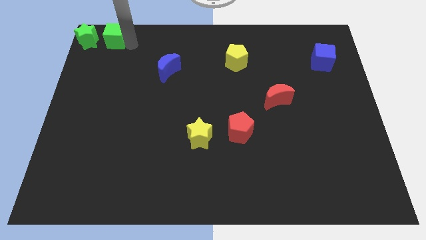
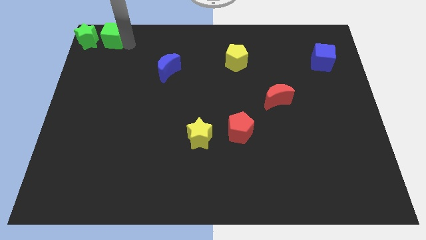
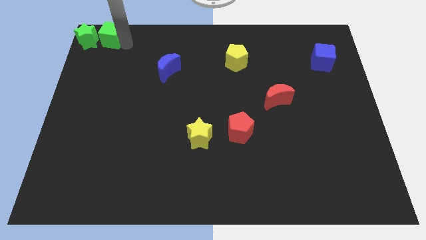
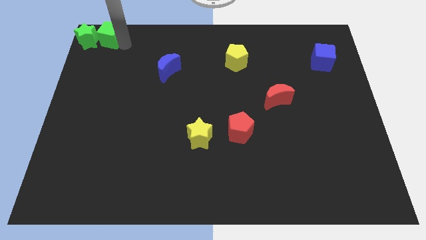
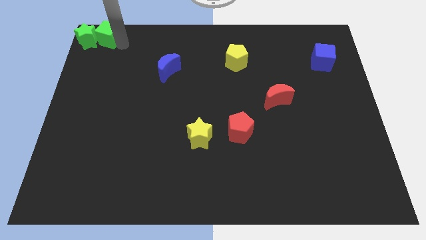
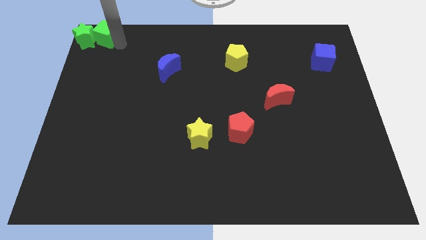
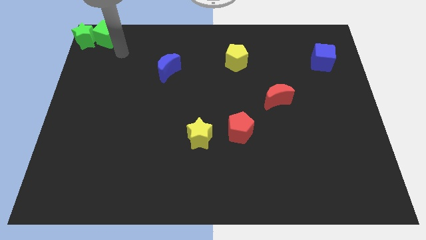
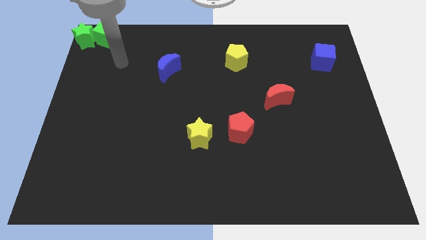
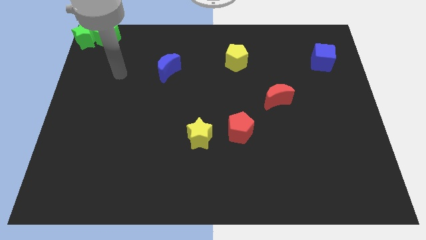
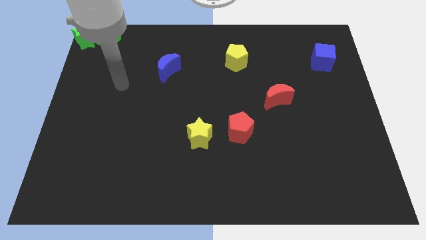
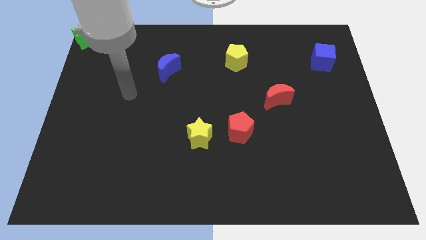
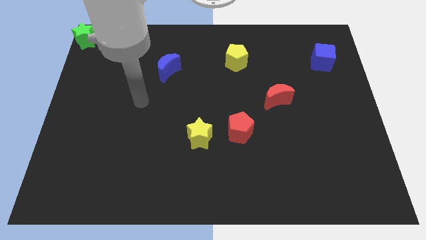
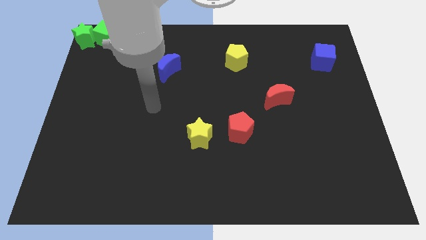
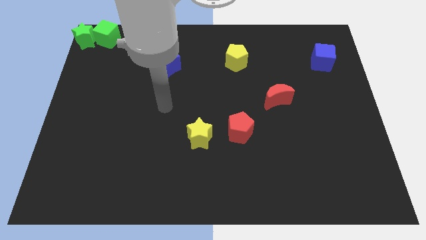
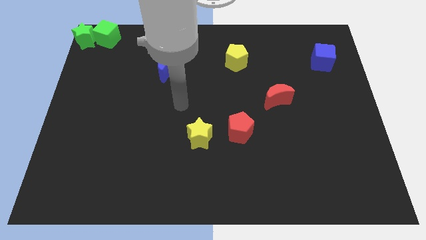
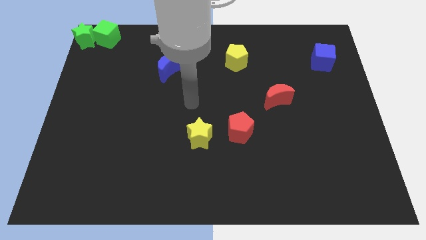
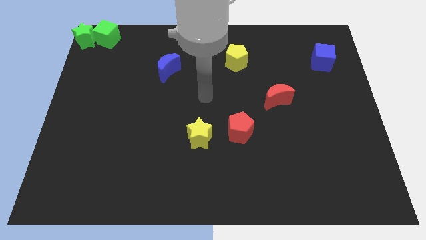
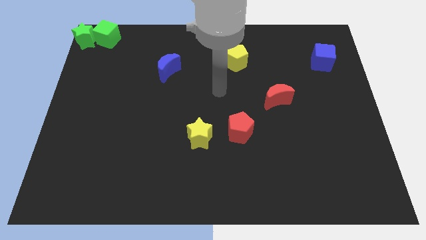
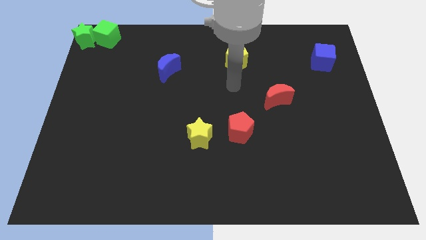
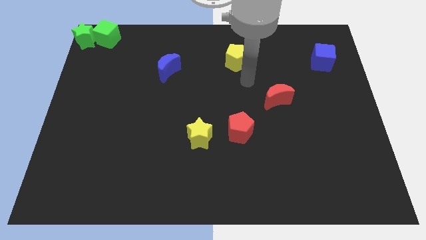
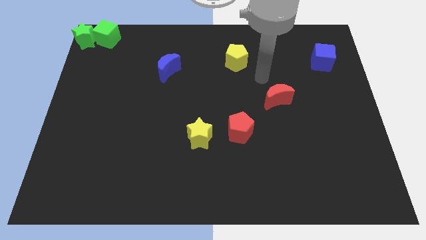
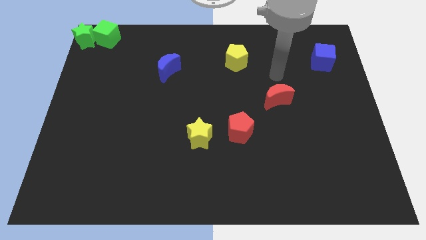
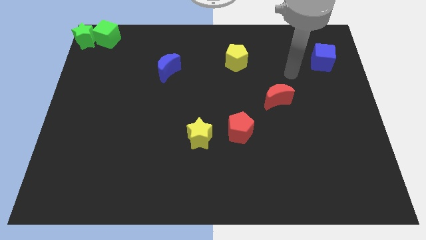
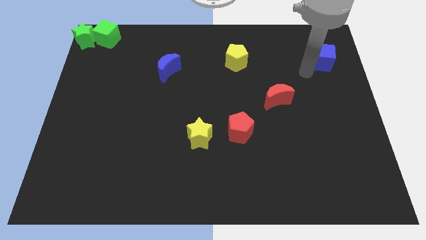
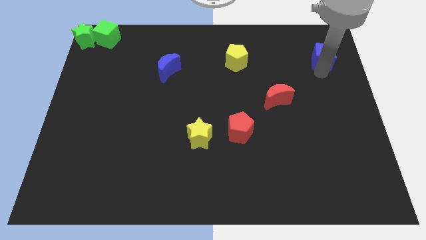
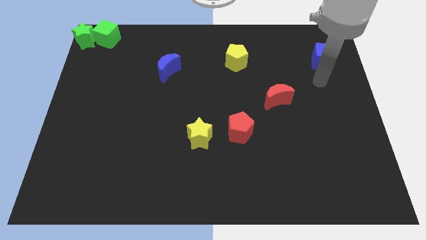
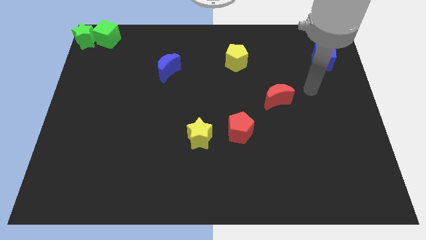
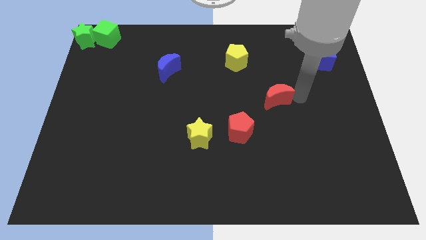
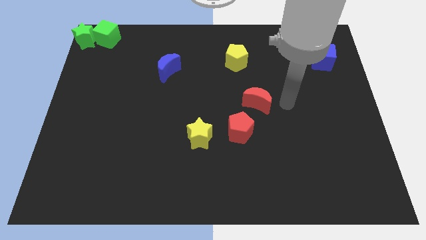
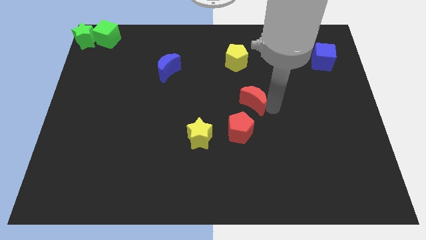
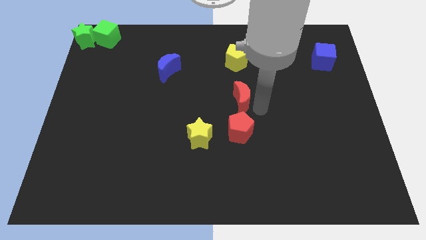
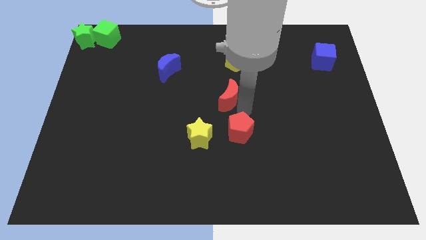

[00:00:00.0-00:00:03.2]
place red moon to the bottom of yellow pentagon

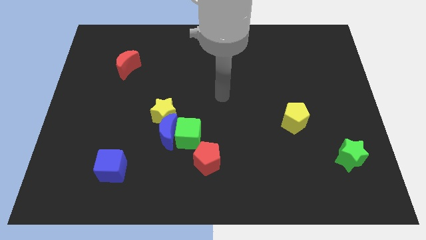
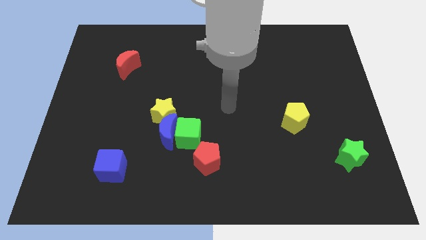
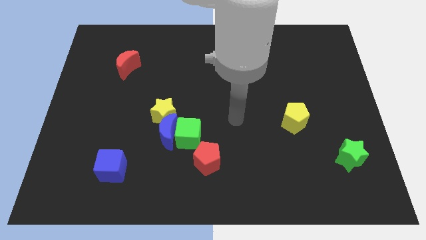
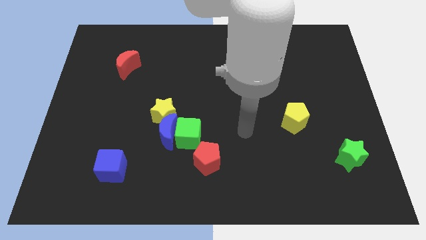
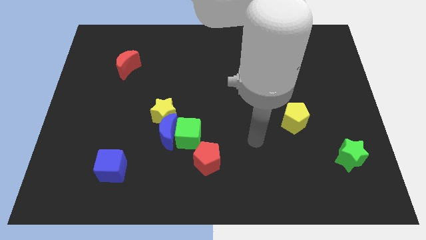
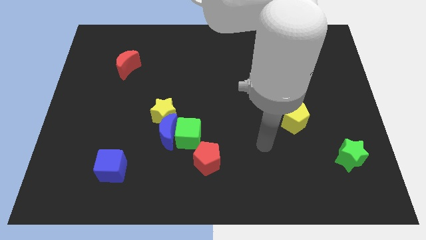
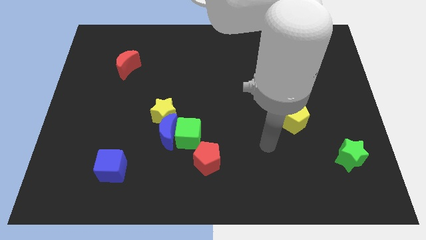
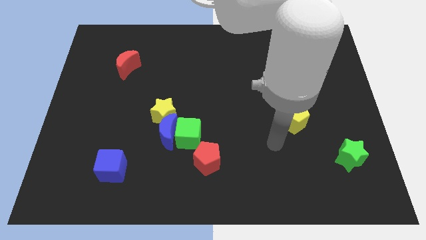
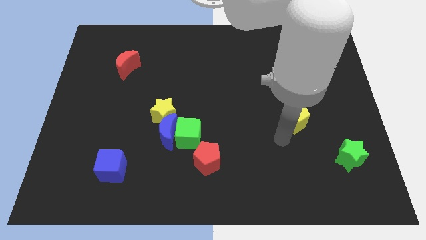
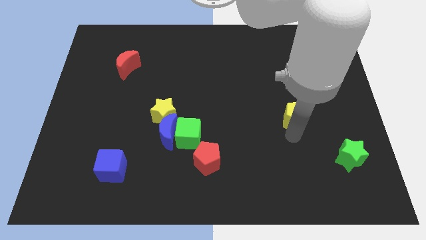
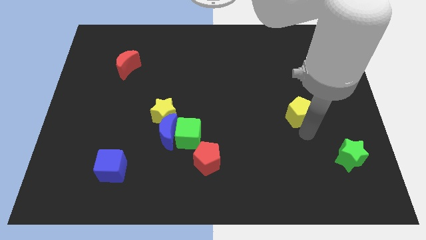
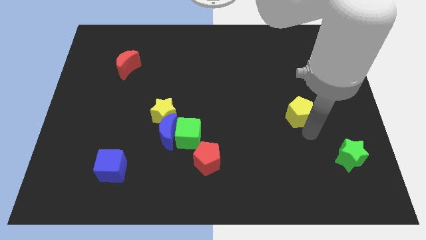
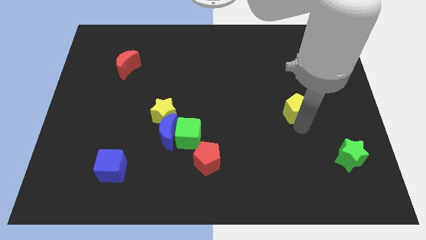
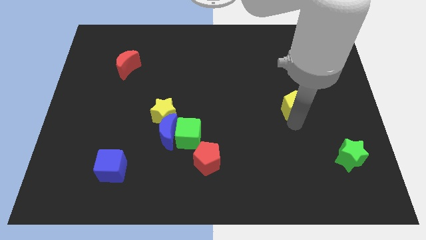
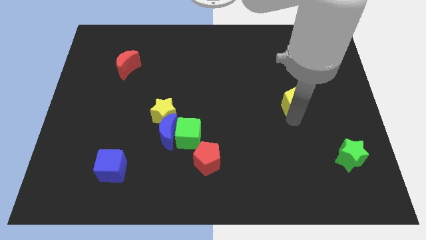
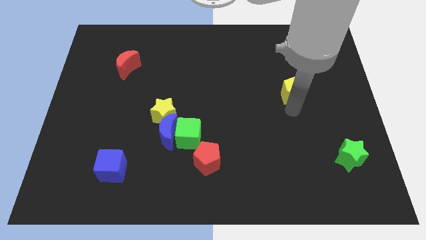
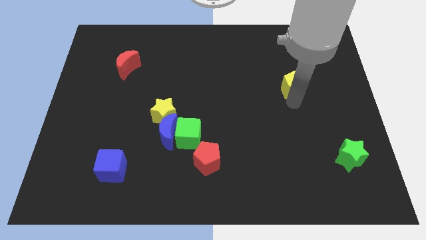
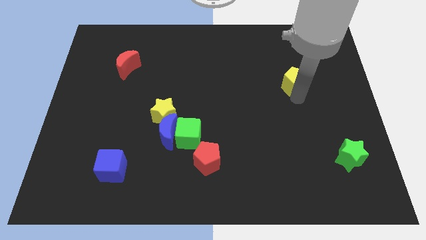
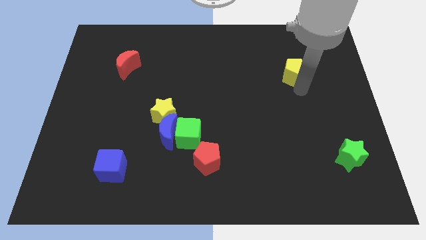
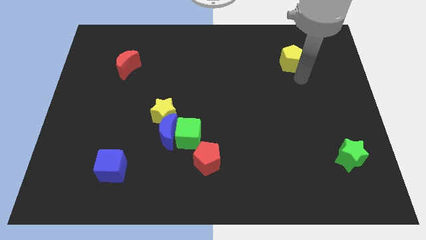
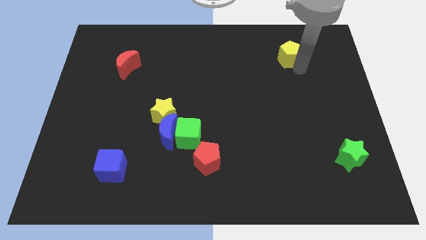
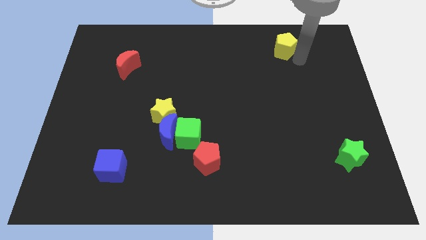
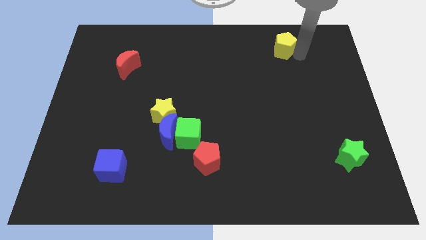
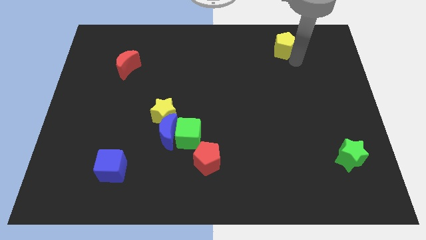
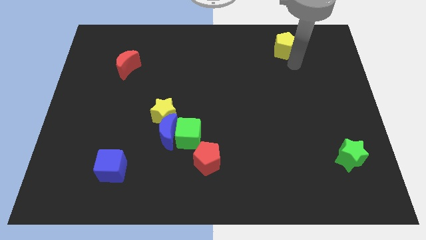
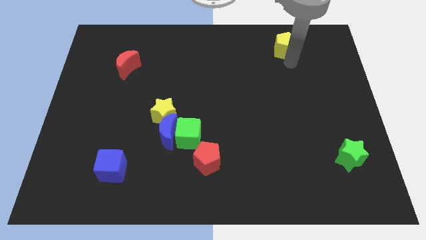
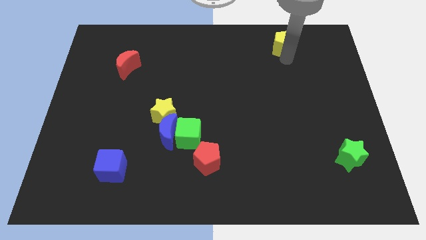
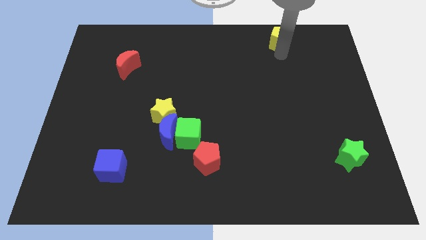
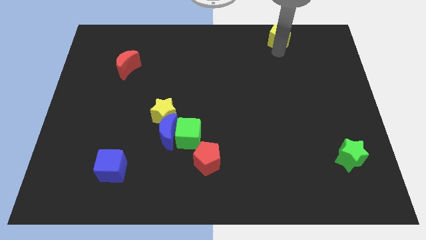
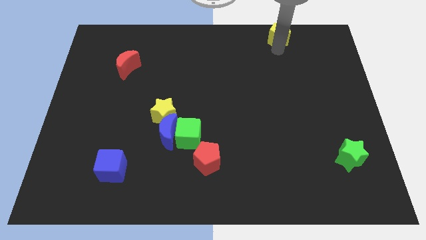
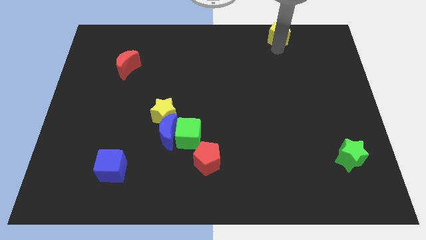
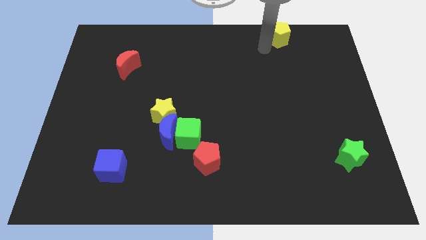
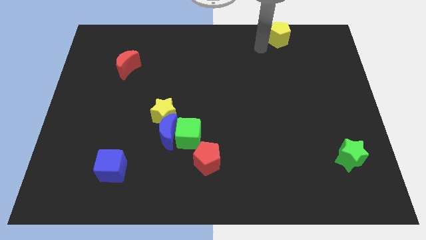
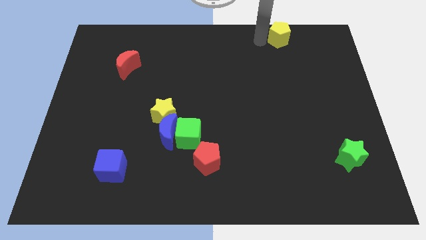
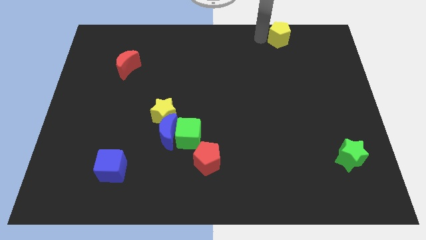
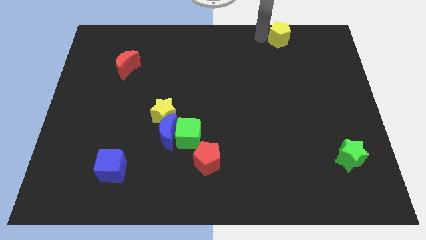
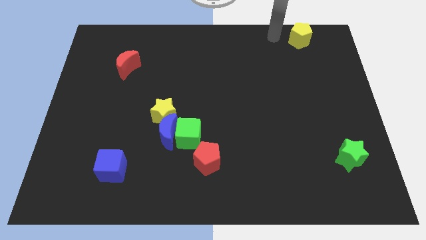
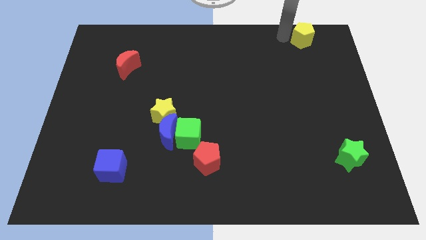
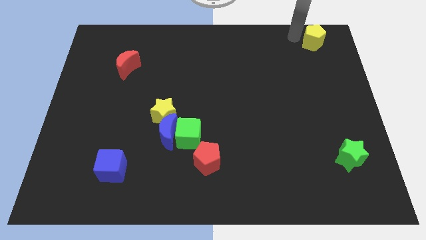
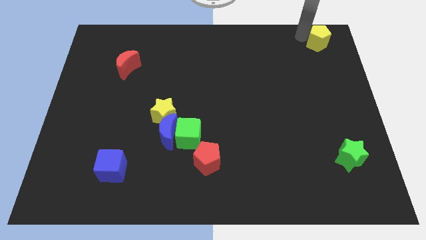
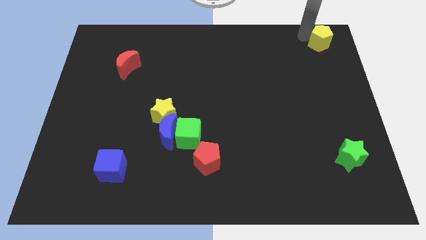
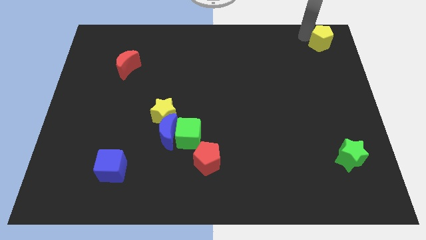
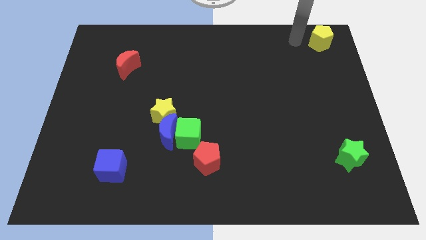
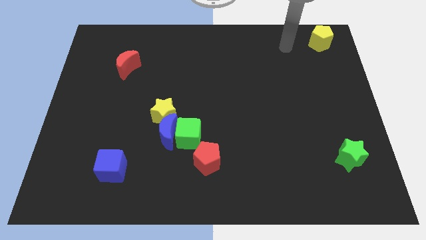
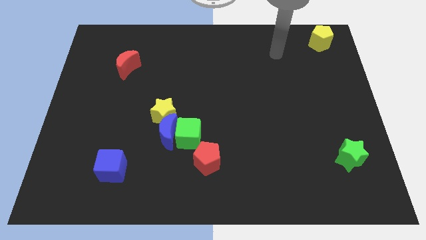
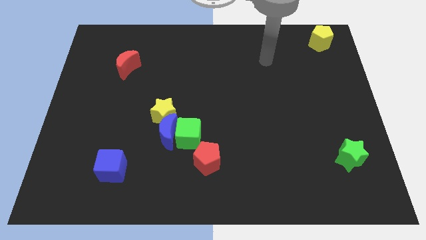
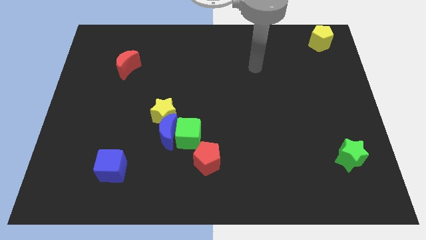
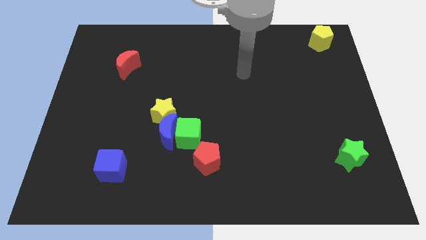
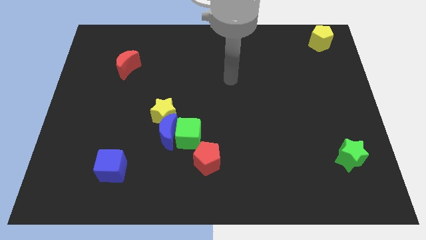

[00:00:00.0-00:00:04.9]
place the yellow pentagon above the green star

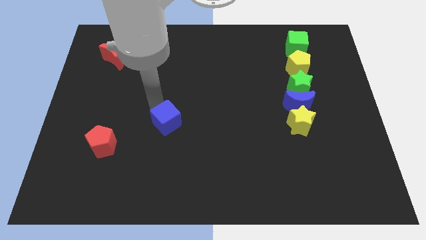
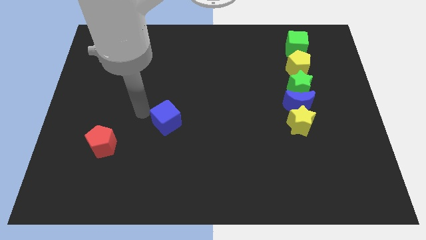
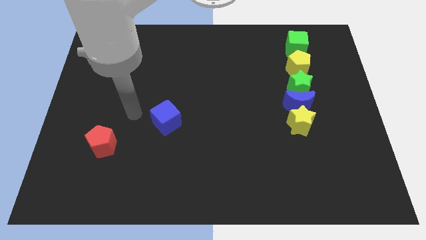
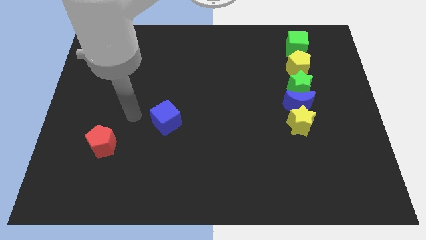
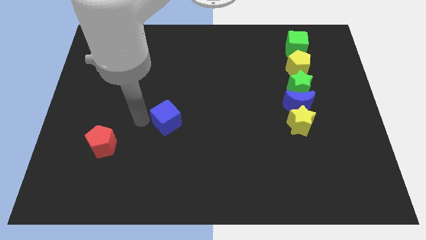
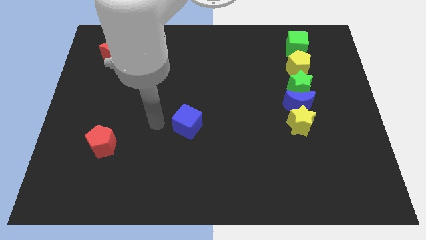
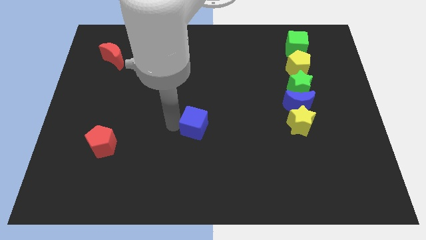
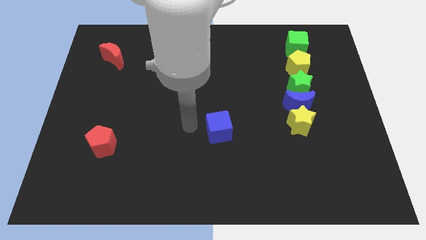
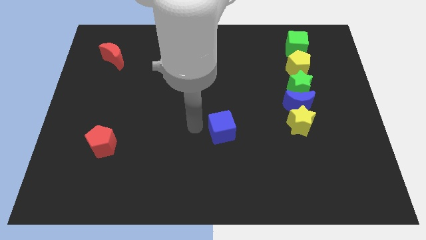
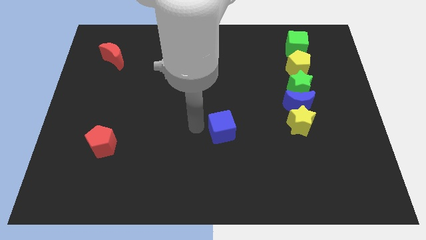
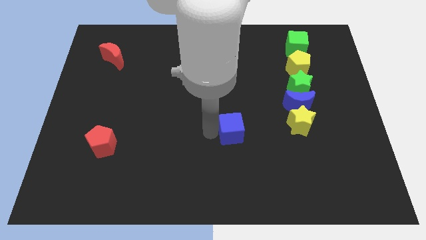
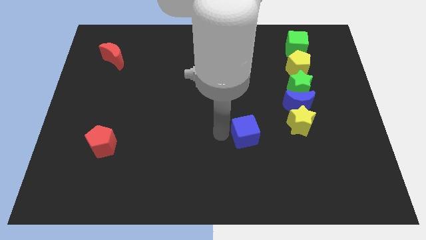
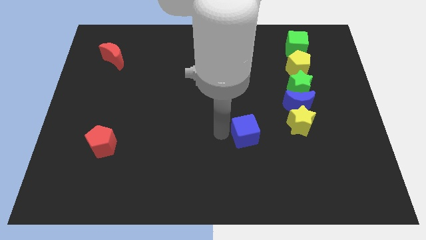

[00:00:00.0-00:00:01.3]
drag the blue cube towards the yellow star
